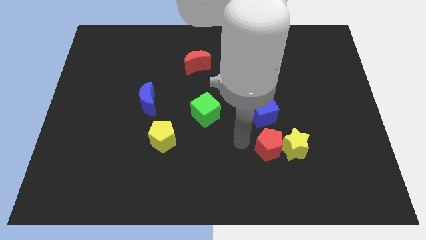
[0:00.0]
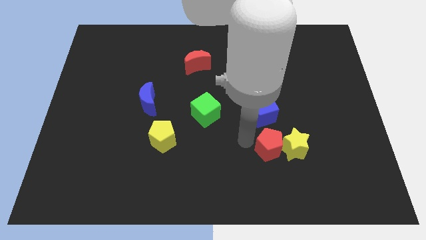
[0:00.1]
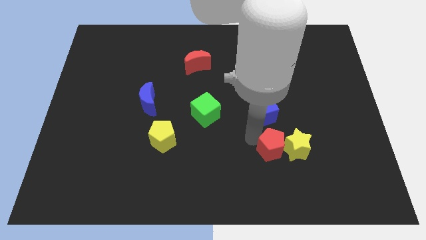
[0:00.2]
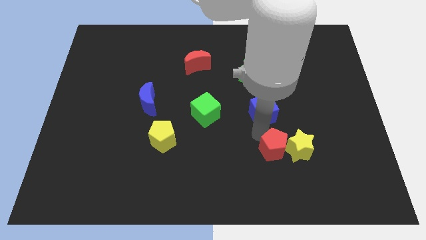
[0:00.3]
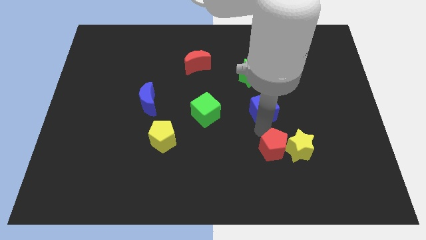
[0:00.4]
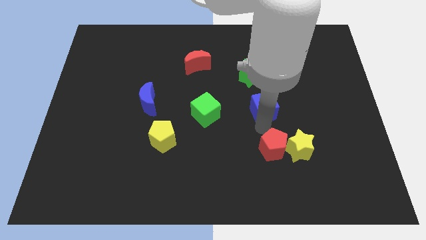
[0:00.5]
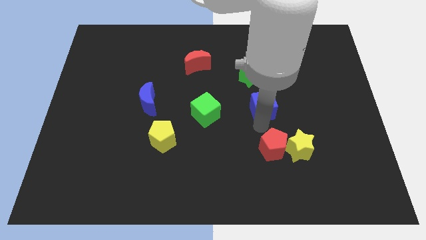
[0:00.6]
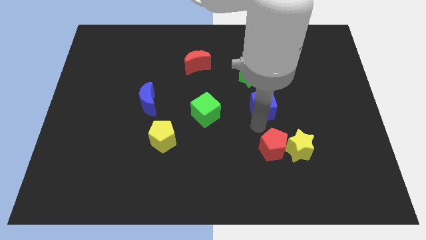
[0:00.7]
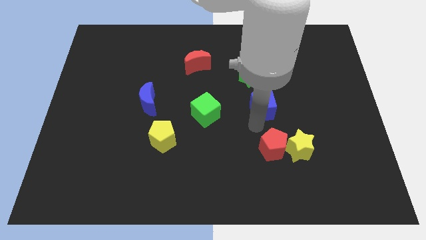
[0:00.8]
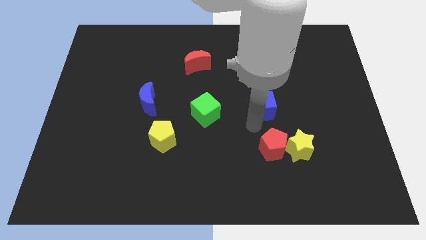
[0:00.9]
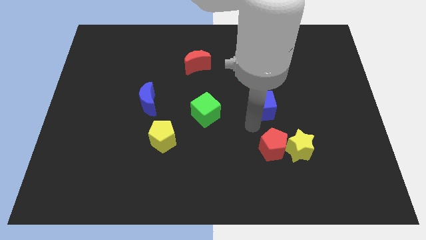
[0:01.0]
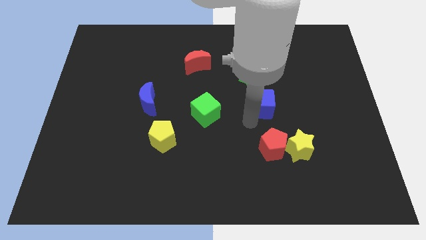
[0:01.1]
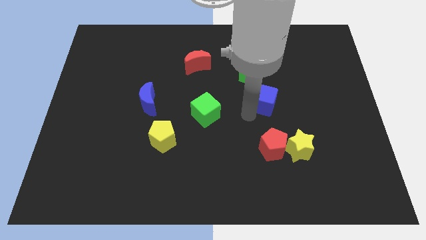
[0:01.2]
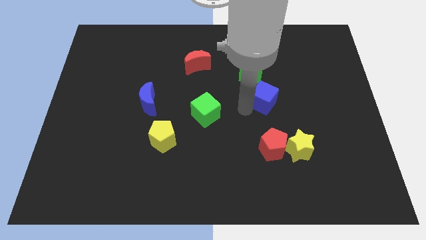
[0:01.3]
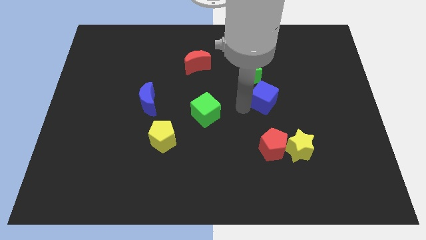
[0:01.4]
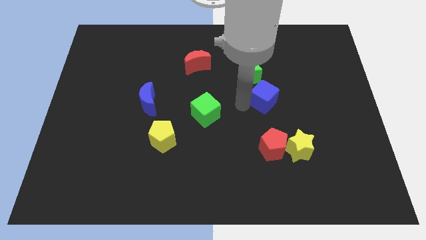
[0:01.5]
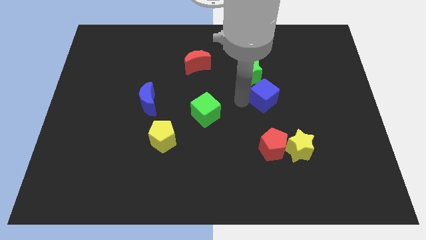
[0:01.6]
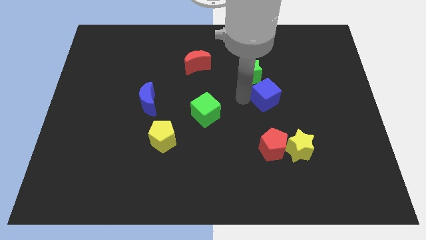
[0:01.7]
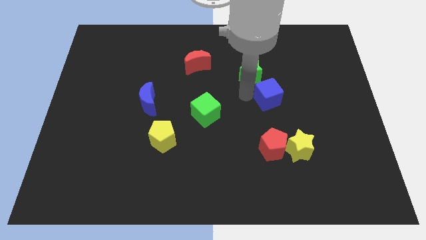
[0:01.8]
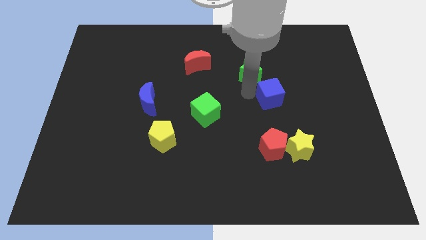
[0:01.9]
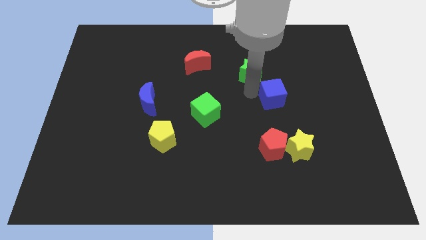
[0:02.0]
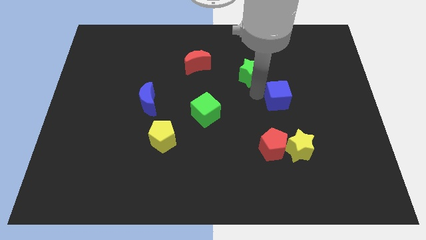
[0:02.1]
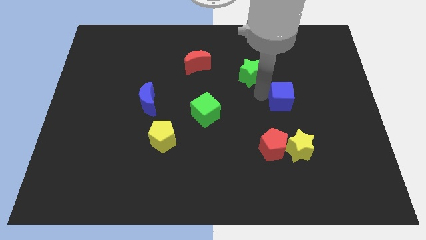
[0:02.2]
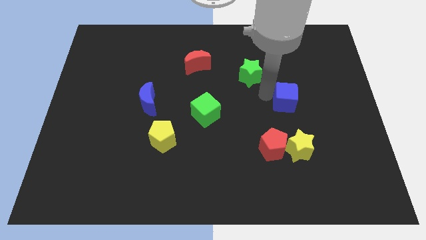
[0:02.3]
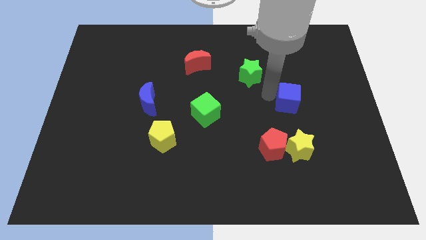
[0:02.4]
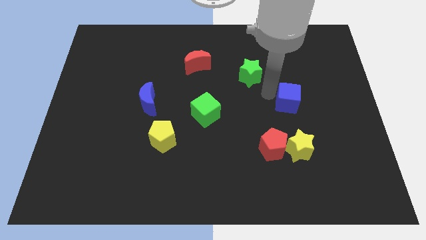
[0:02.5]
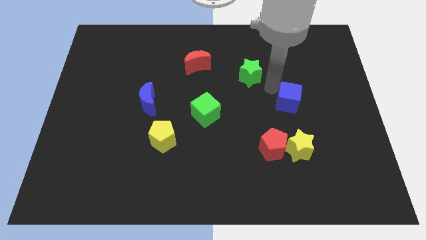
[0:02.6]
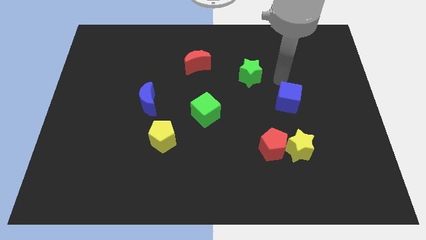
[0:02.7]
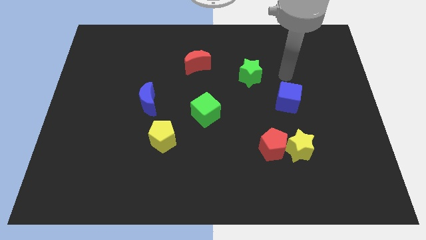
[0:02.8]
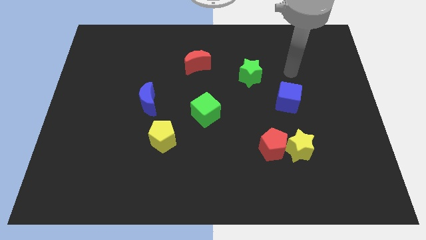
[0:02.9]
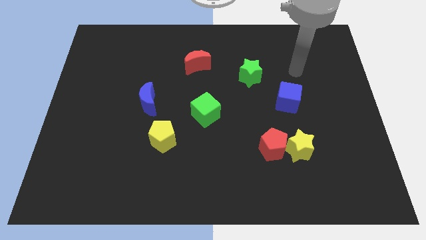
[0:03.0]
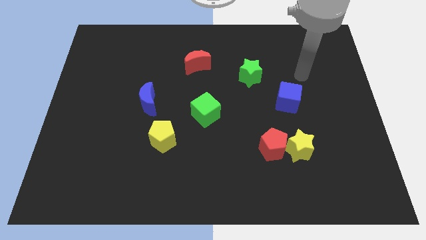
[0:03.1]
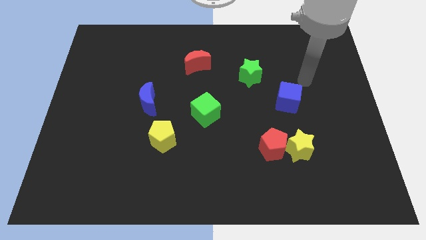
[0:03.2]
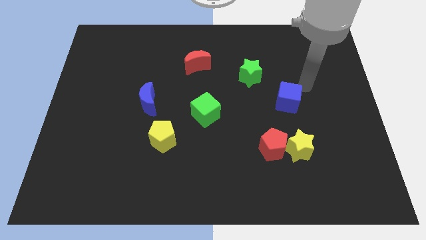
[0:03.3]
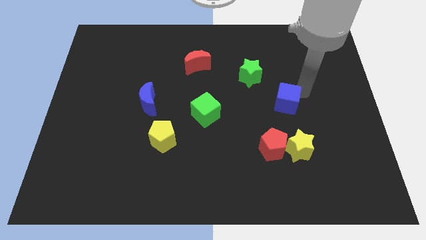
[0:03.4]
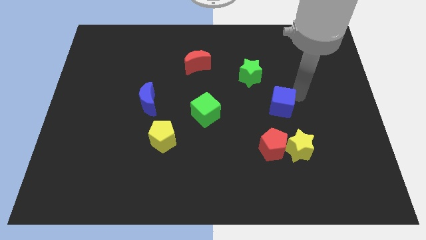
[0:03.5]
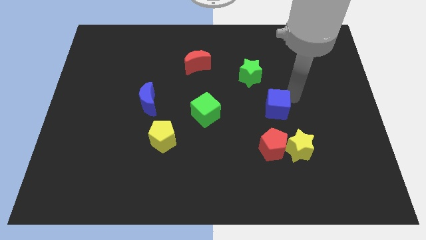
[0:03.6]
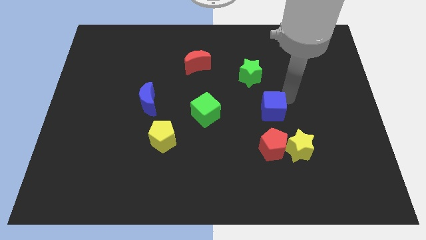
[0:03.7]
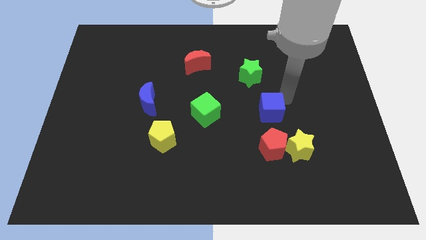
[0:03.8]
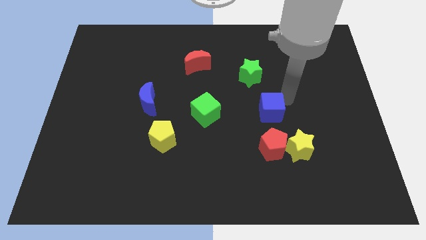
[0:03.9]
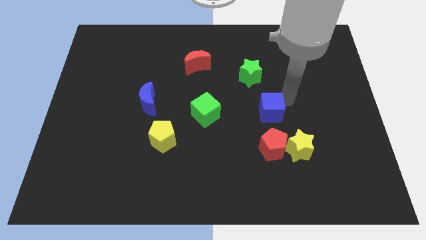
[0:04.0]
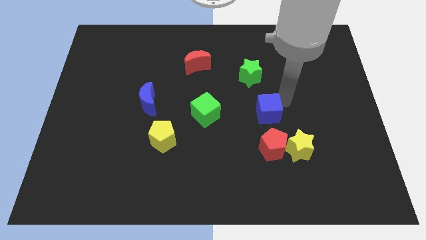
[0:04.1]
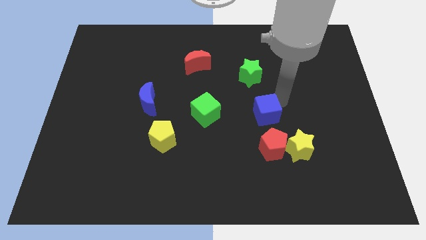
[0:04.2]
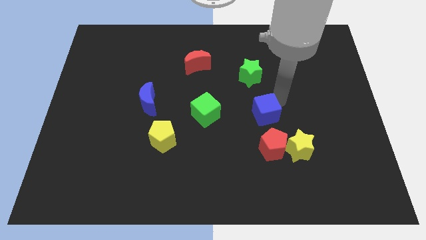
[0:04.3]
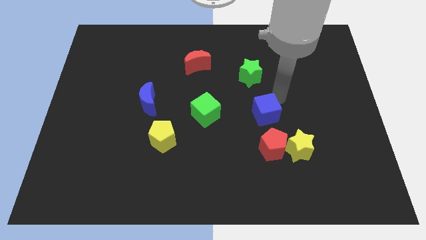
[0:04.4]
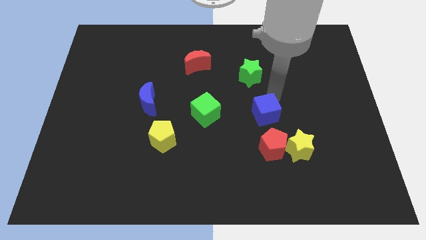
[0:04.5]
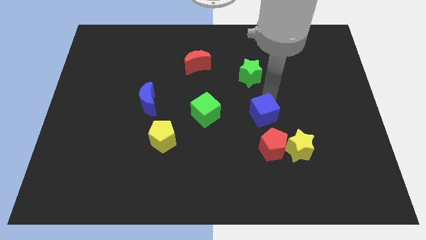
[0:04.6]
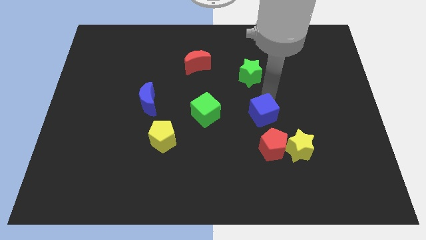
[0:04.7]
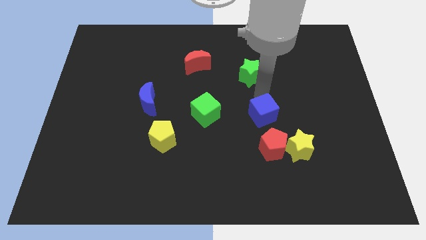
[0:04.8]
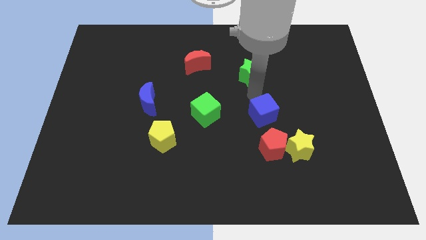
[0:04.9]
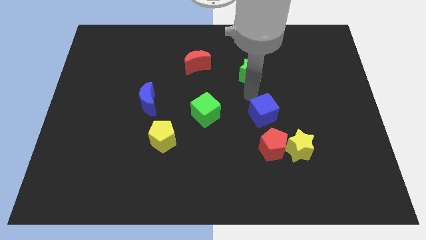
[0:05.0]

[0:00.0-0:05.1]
place the blue cube in between the red pentagon and green star

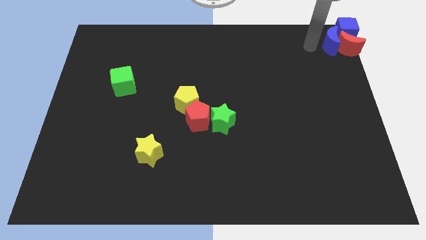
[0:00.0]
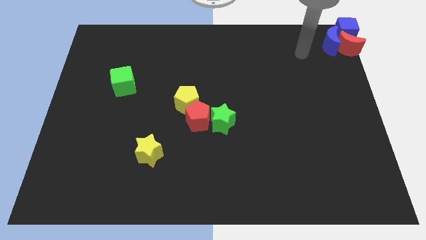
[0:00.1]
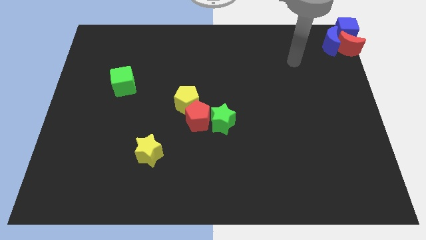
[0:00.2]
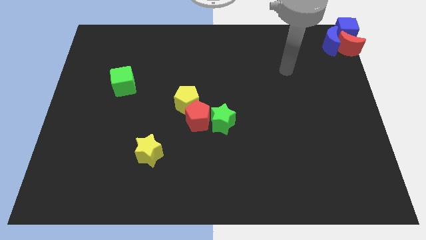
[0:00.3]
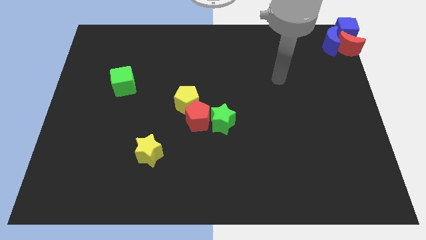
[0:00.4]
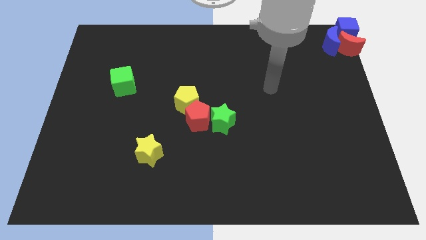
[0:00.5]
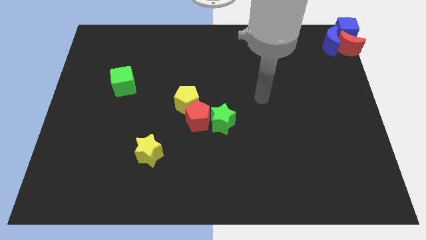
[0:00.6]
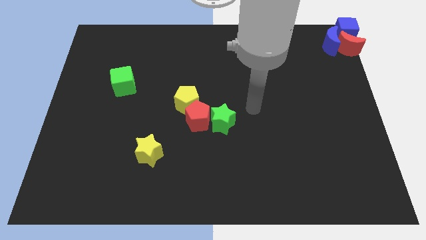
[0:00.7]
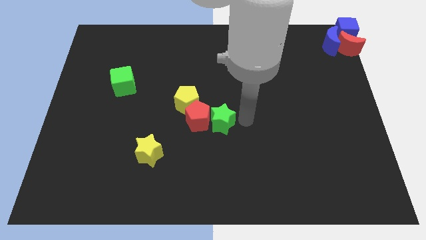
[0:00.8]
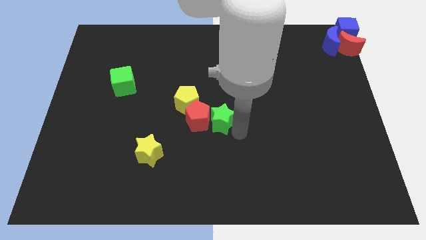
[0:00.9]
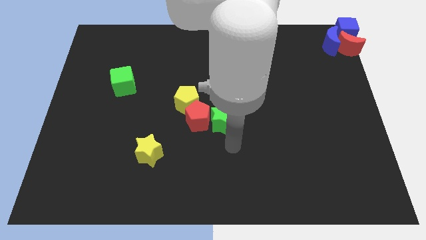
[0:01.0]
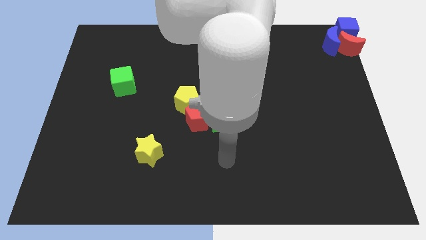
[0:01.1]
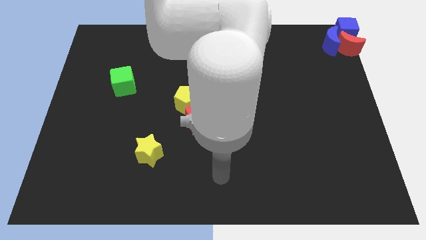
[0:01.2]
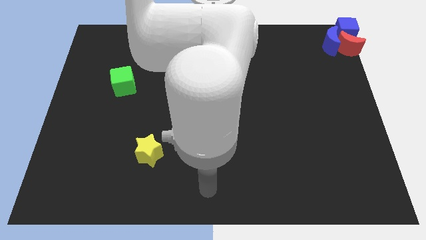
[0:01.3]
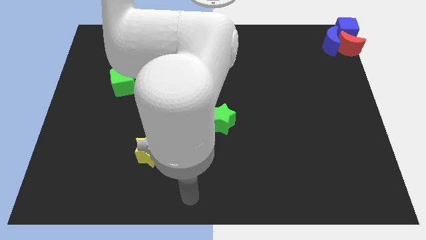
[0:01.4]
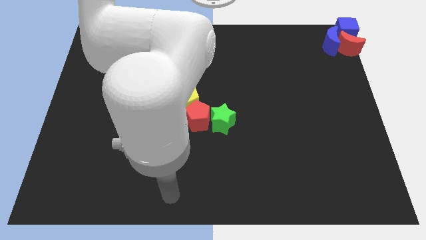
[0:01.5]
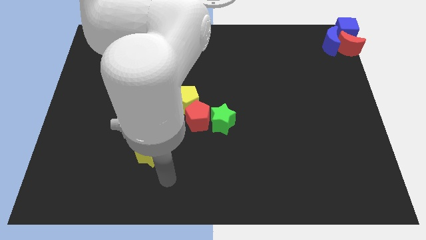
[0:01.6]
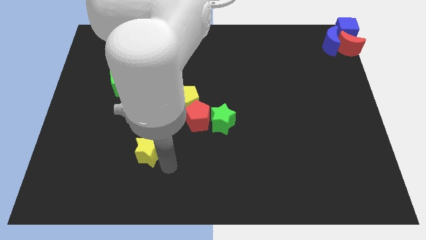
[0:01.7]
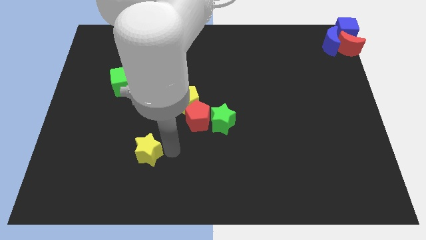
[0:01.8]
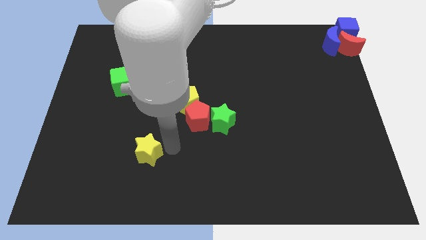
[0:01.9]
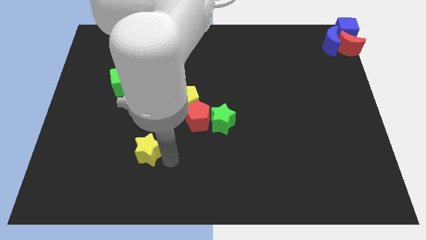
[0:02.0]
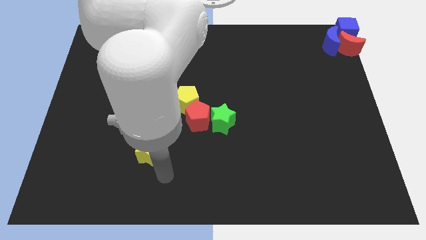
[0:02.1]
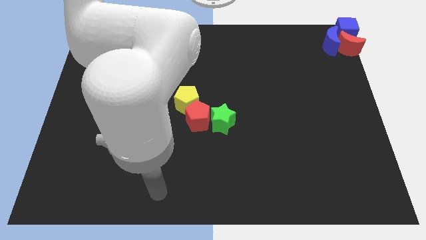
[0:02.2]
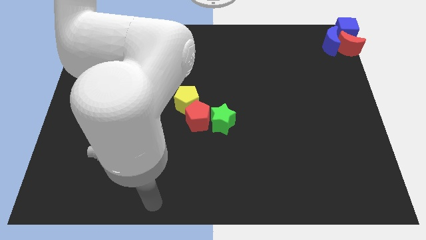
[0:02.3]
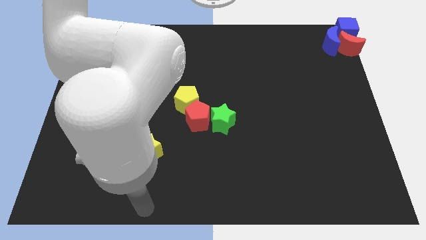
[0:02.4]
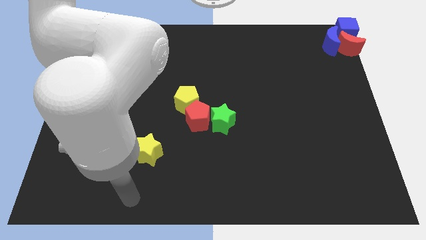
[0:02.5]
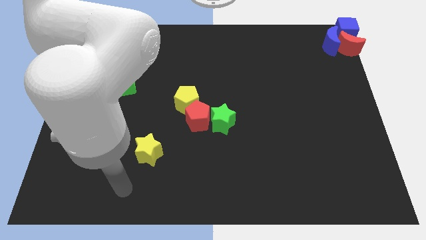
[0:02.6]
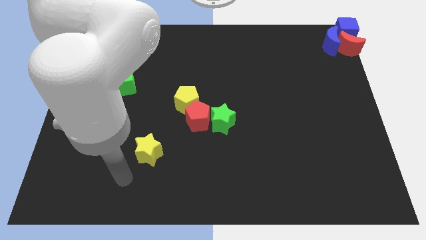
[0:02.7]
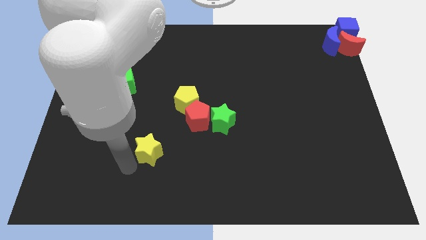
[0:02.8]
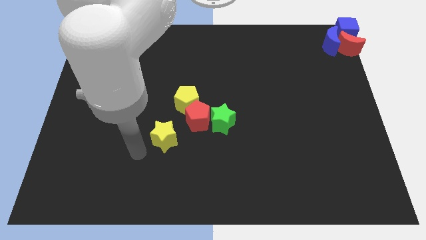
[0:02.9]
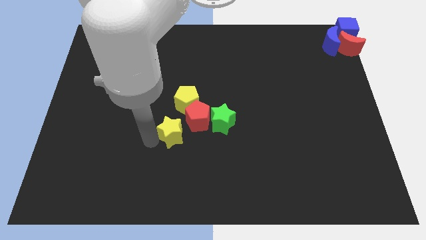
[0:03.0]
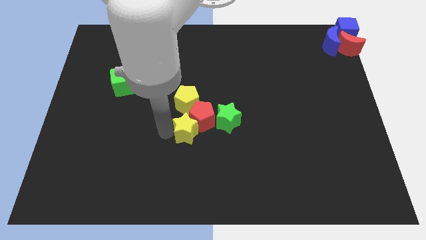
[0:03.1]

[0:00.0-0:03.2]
push the yellow star to the bottom of the yellow pentagon

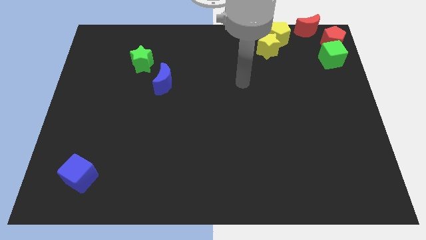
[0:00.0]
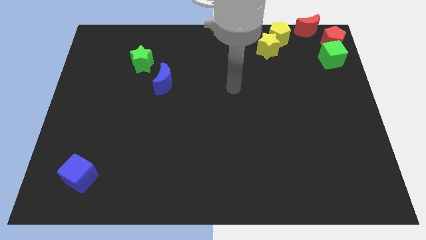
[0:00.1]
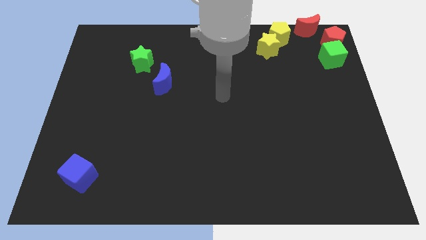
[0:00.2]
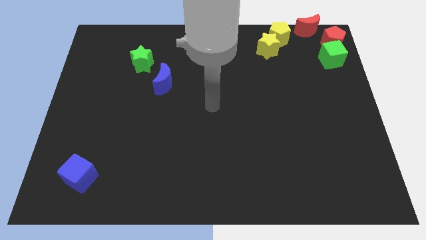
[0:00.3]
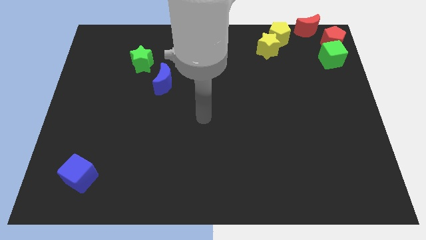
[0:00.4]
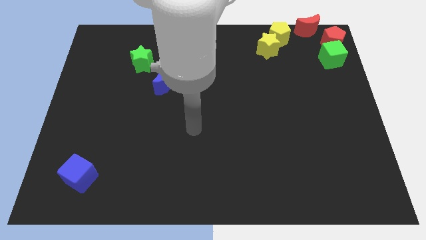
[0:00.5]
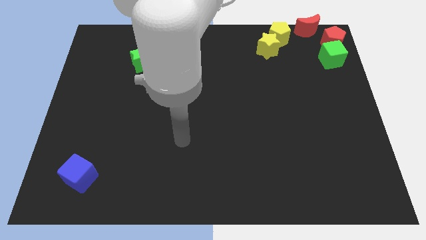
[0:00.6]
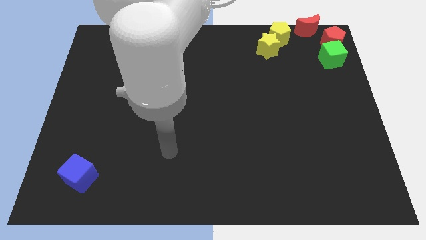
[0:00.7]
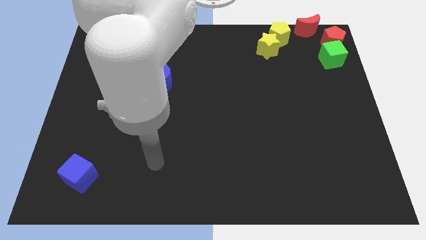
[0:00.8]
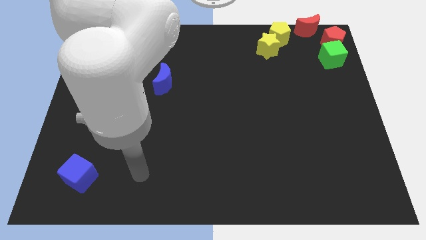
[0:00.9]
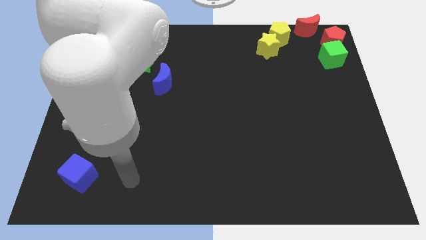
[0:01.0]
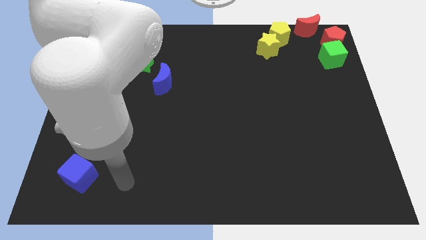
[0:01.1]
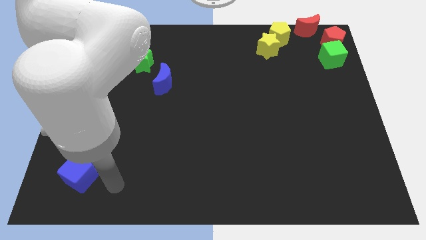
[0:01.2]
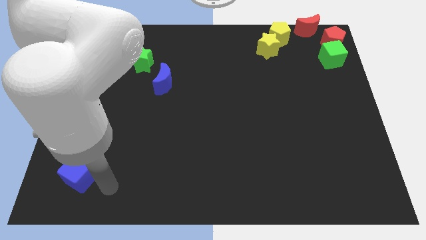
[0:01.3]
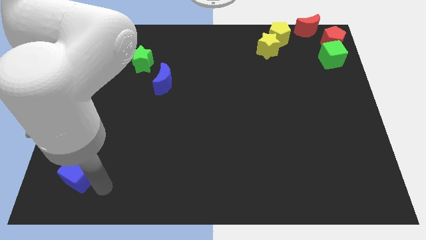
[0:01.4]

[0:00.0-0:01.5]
point your arm towards blue cube
